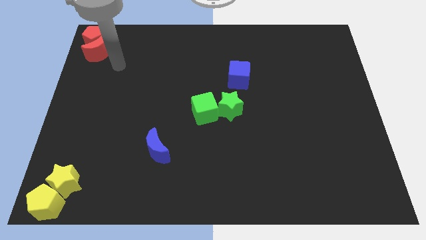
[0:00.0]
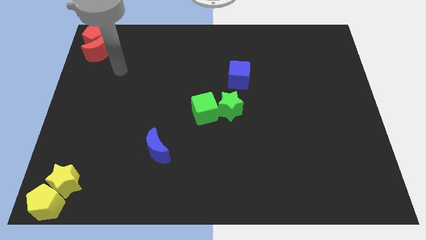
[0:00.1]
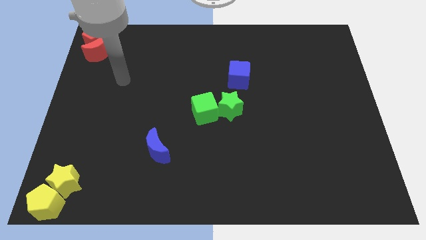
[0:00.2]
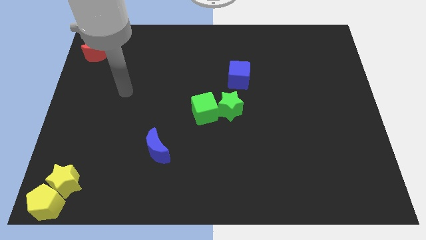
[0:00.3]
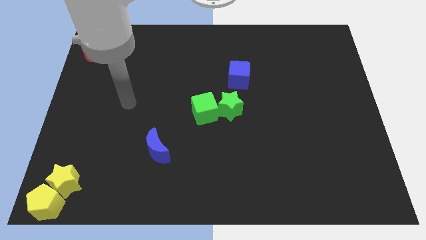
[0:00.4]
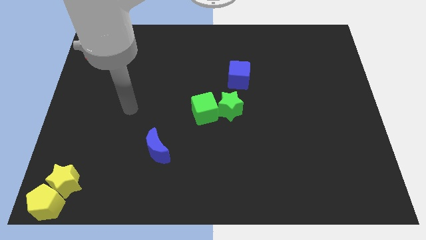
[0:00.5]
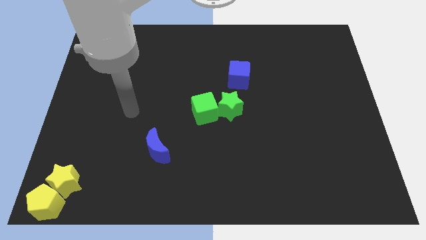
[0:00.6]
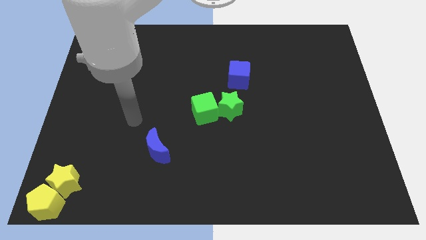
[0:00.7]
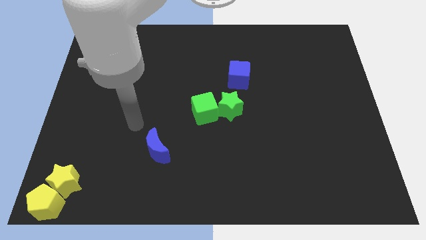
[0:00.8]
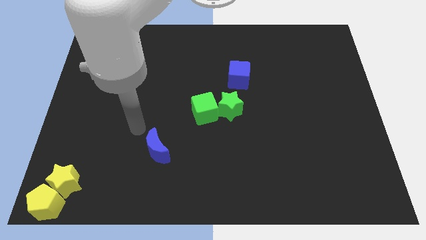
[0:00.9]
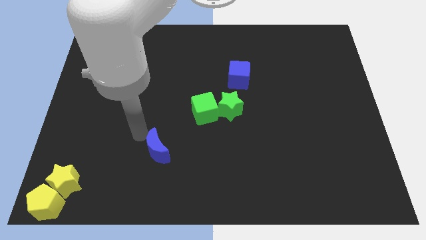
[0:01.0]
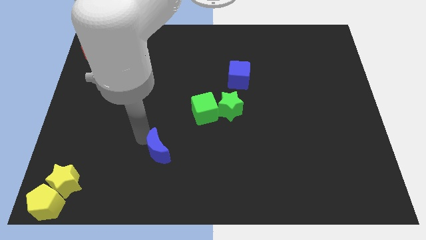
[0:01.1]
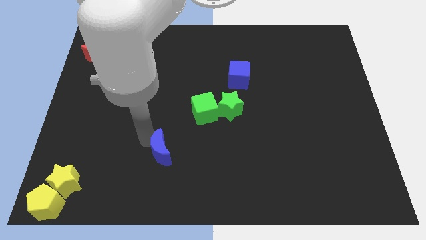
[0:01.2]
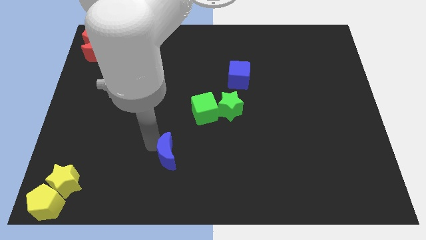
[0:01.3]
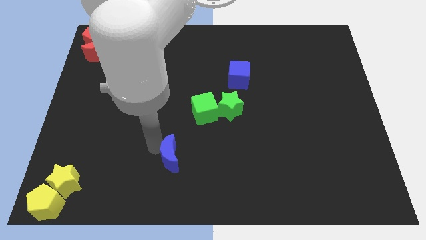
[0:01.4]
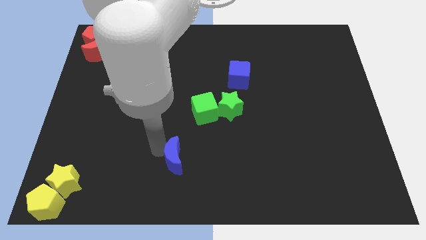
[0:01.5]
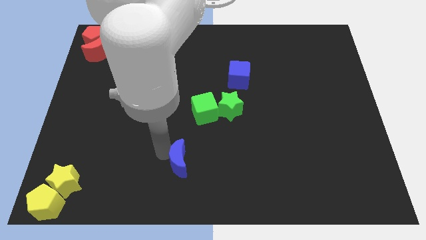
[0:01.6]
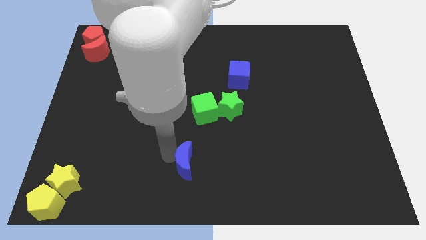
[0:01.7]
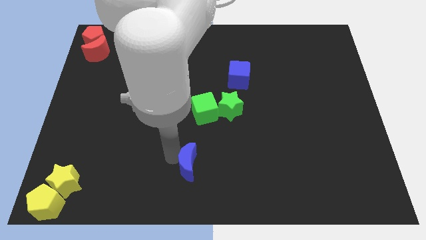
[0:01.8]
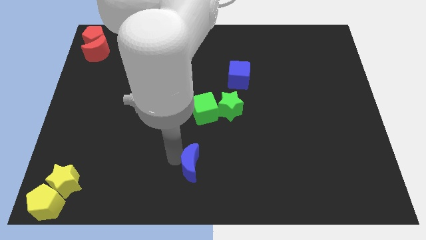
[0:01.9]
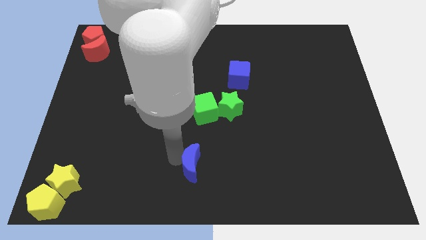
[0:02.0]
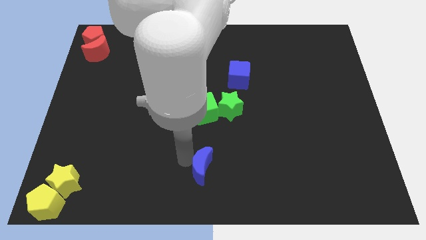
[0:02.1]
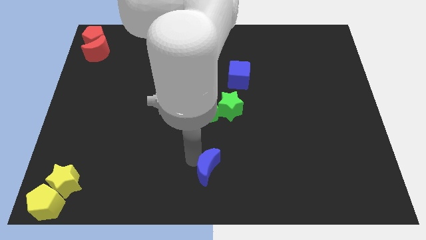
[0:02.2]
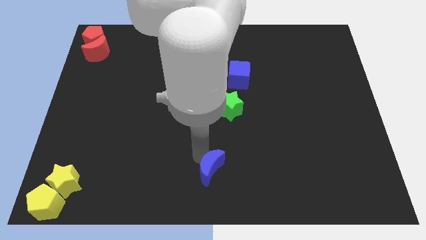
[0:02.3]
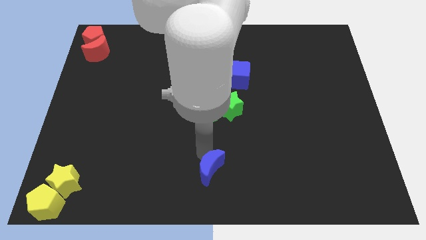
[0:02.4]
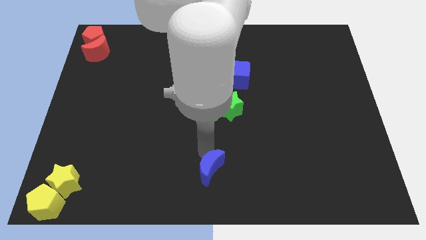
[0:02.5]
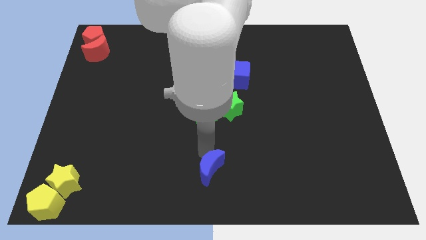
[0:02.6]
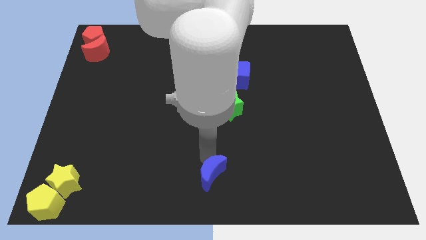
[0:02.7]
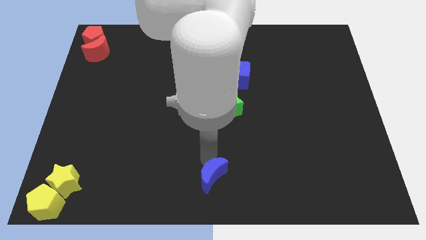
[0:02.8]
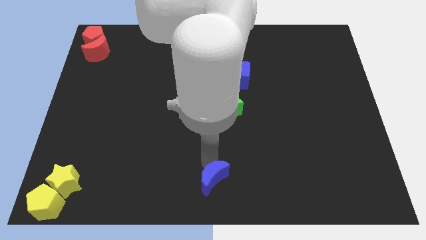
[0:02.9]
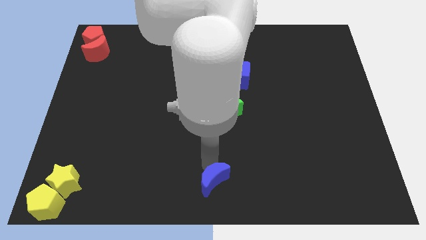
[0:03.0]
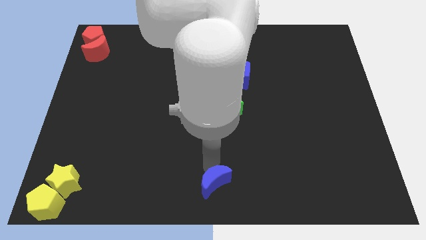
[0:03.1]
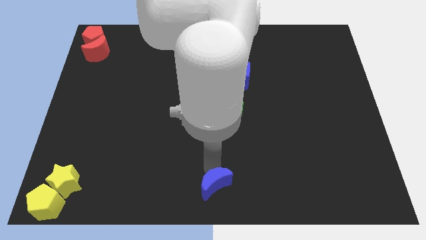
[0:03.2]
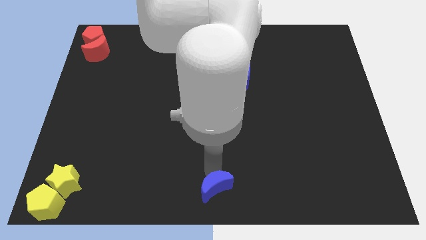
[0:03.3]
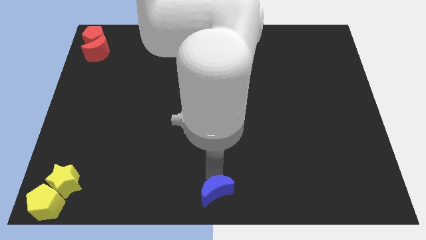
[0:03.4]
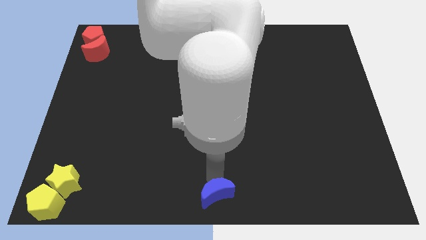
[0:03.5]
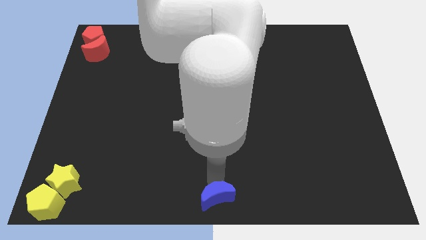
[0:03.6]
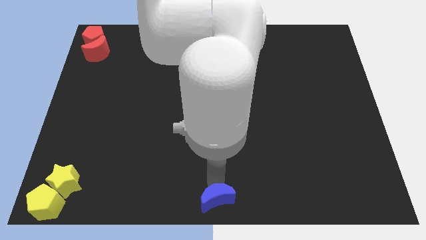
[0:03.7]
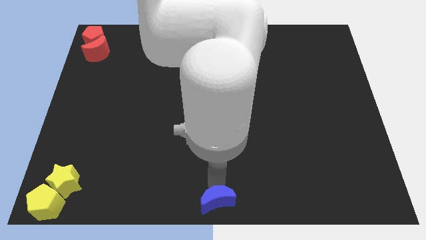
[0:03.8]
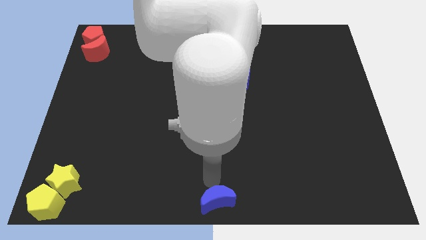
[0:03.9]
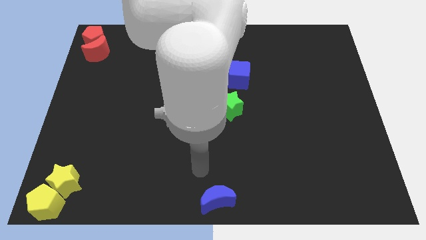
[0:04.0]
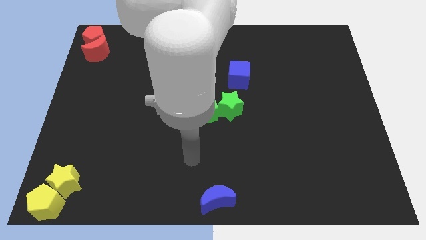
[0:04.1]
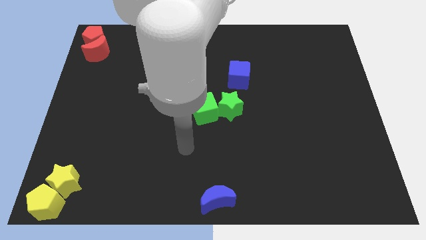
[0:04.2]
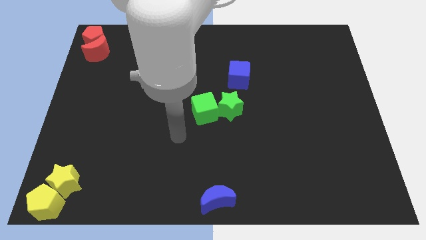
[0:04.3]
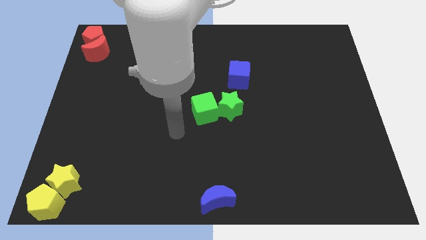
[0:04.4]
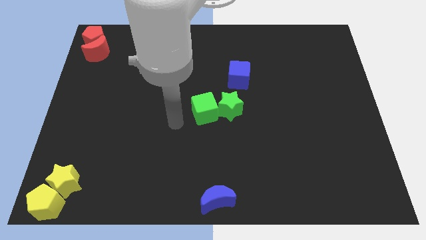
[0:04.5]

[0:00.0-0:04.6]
move the blue moon to the bottom center of the board

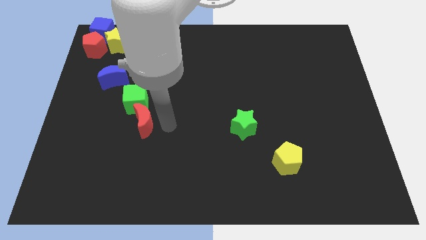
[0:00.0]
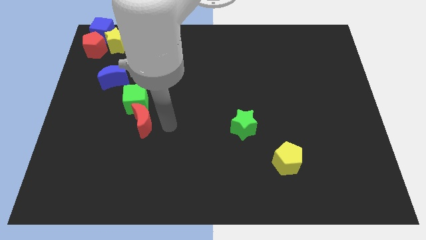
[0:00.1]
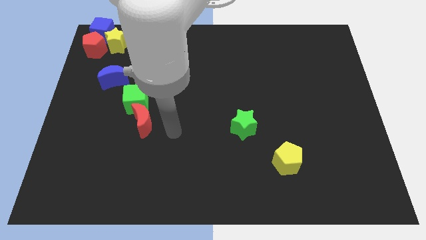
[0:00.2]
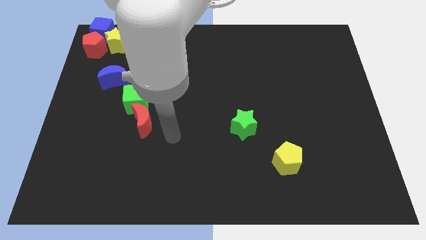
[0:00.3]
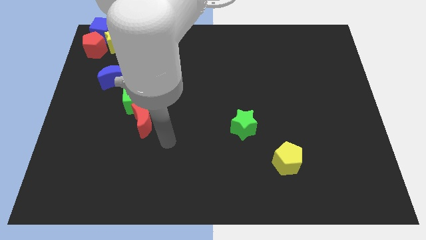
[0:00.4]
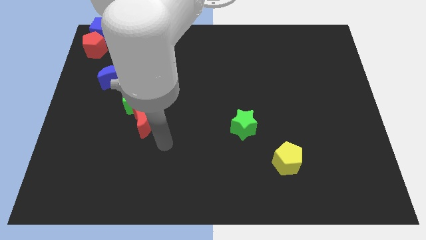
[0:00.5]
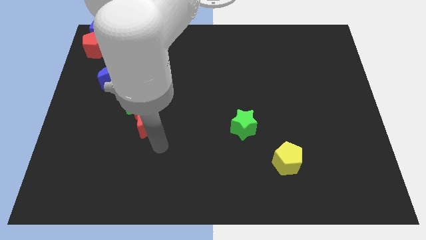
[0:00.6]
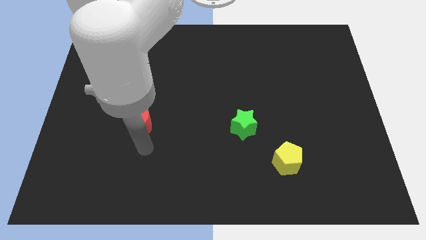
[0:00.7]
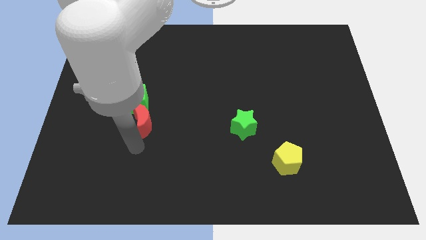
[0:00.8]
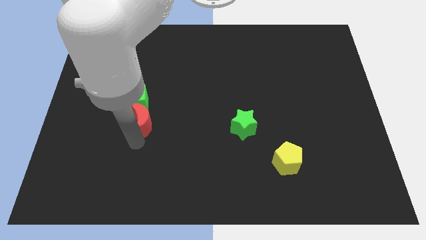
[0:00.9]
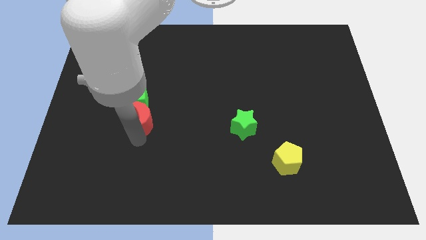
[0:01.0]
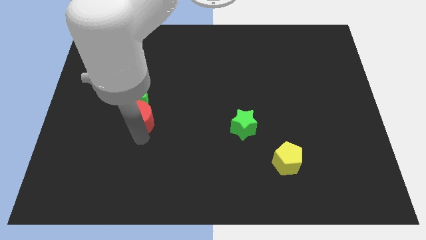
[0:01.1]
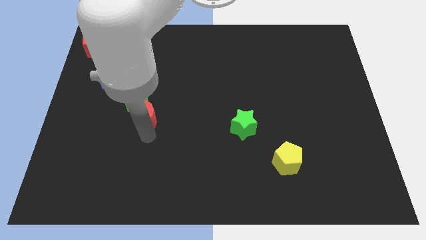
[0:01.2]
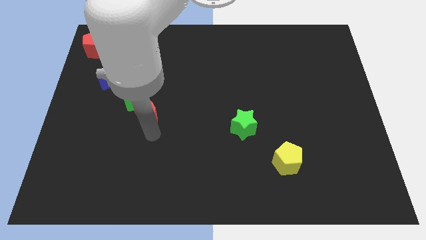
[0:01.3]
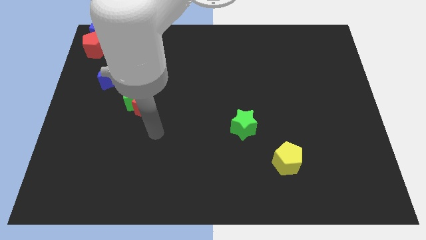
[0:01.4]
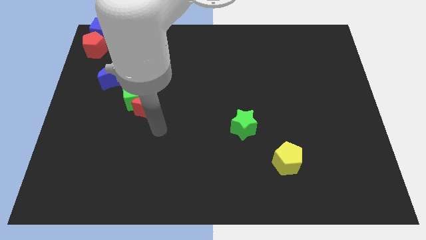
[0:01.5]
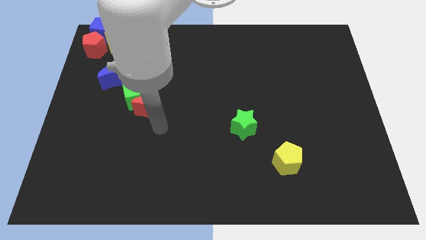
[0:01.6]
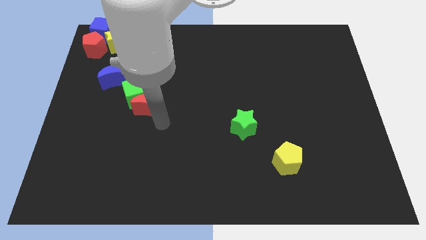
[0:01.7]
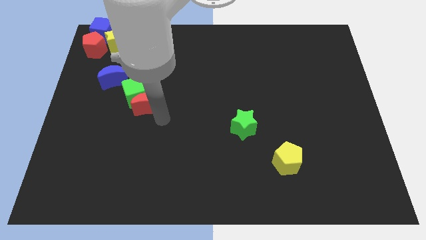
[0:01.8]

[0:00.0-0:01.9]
move the red crescent in to the green cube

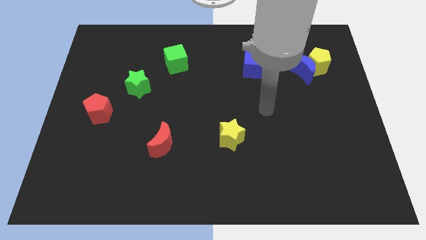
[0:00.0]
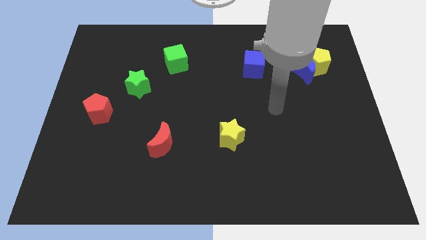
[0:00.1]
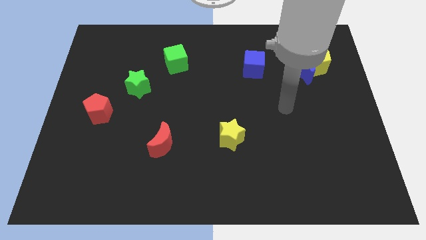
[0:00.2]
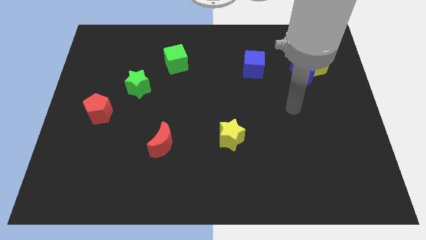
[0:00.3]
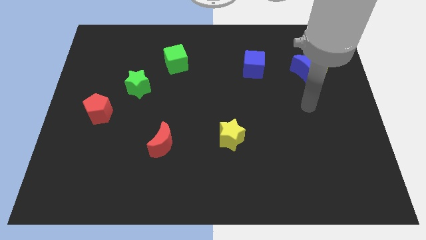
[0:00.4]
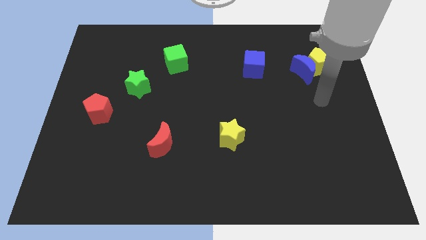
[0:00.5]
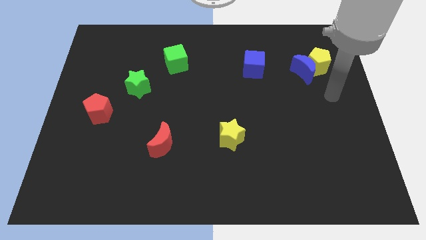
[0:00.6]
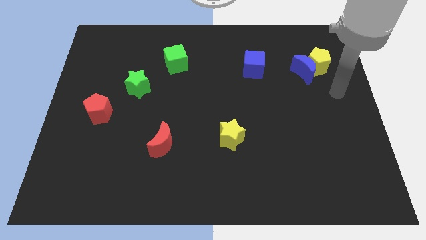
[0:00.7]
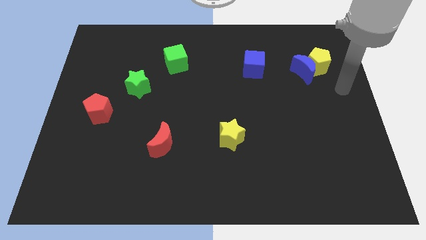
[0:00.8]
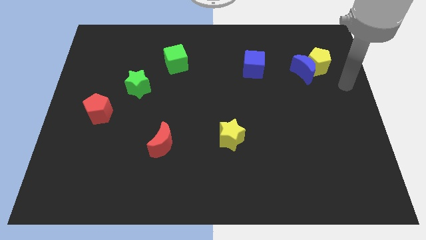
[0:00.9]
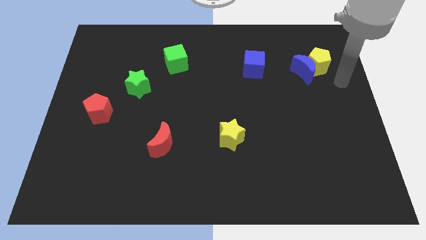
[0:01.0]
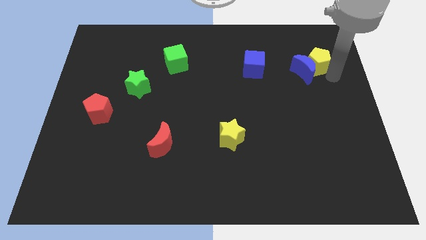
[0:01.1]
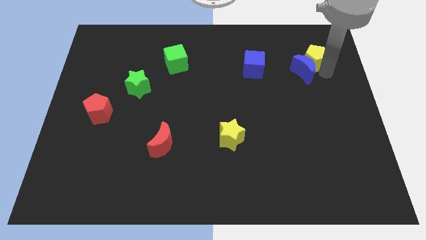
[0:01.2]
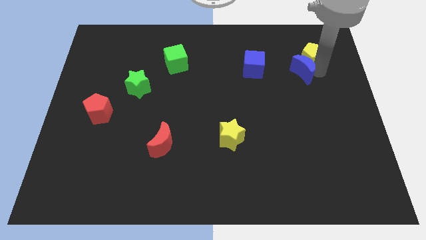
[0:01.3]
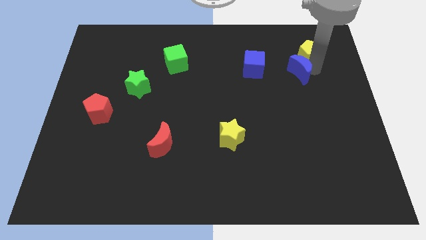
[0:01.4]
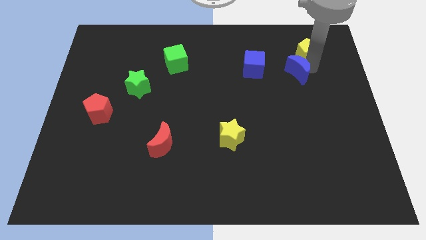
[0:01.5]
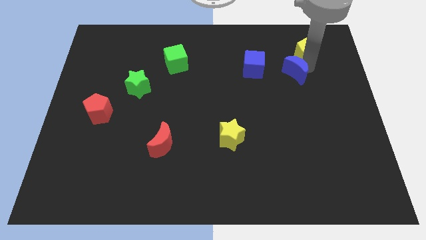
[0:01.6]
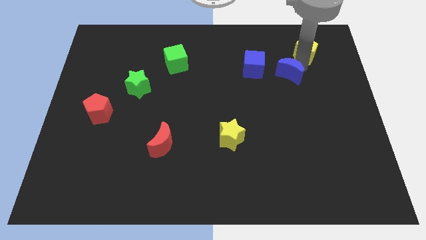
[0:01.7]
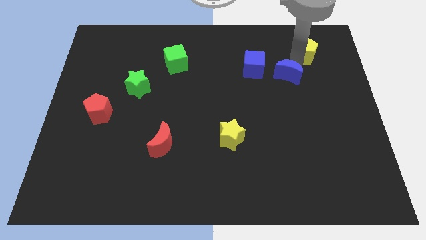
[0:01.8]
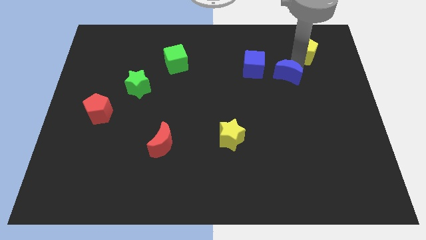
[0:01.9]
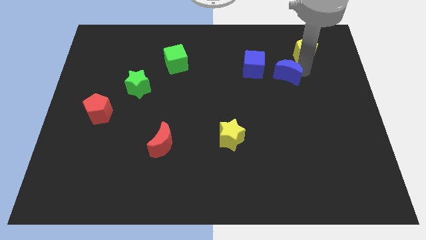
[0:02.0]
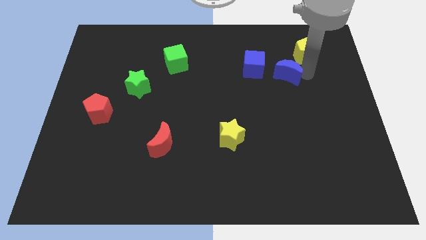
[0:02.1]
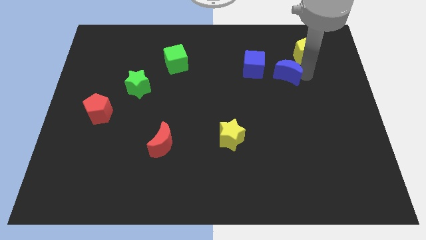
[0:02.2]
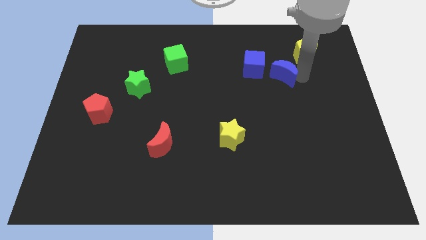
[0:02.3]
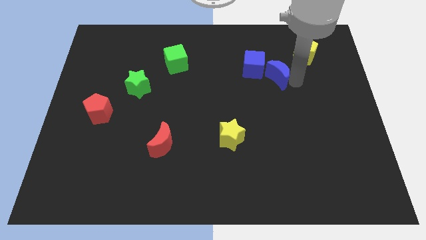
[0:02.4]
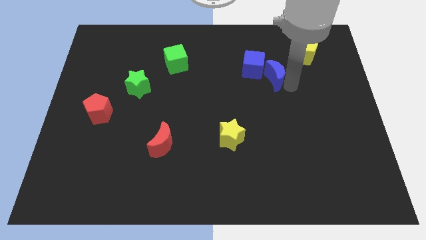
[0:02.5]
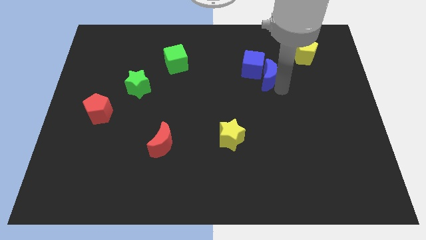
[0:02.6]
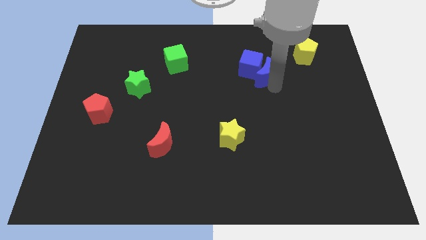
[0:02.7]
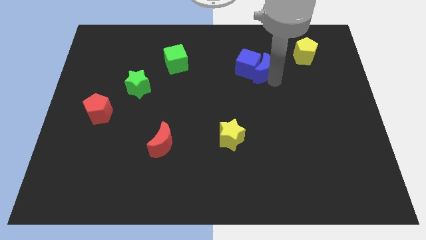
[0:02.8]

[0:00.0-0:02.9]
push the blue moon towards the blue cube
